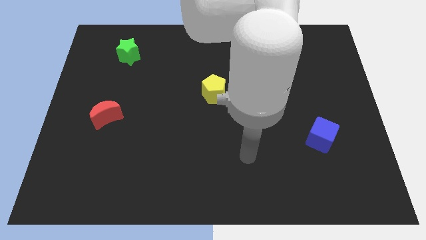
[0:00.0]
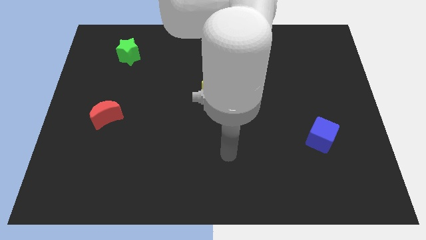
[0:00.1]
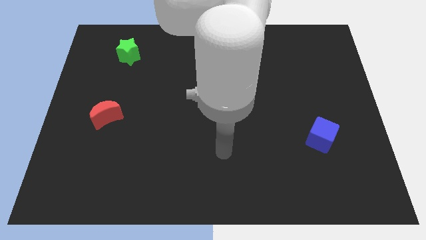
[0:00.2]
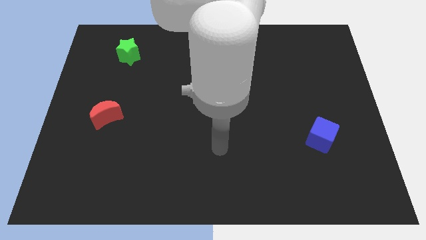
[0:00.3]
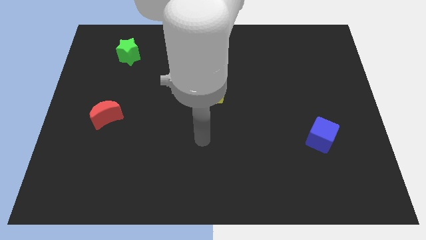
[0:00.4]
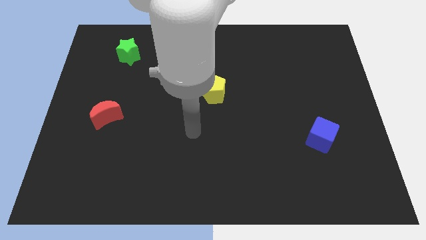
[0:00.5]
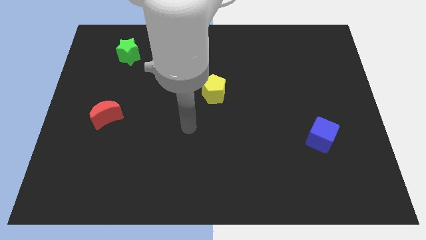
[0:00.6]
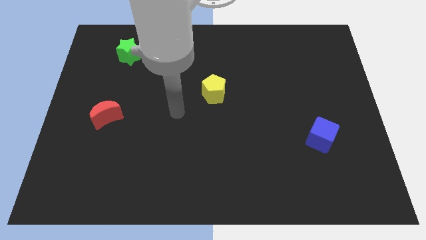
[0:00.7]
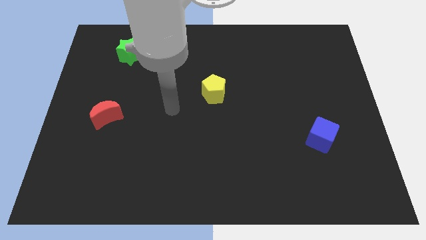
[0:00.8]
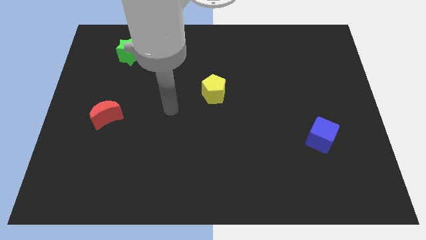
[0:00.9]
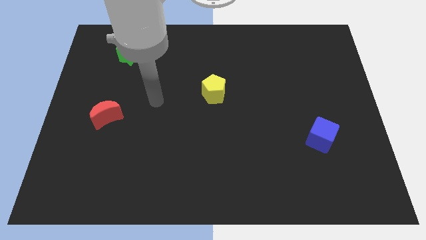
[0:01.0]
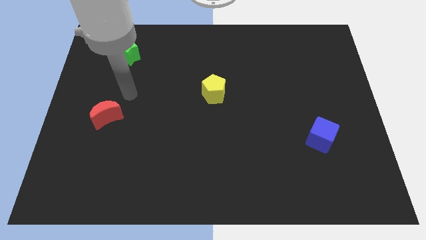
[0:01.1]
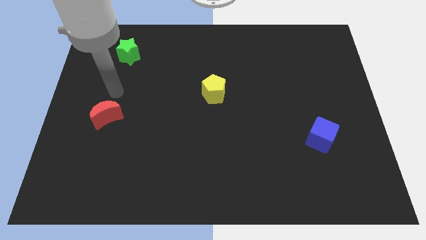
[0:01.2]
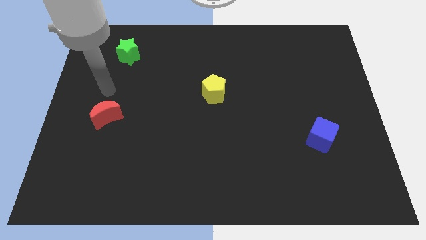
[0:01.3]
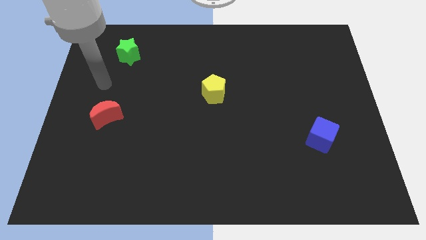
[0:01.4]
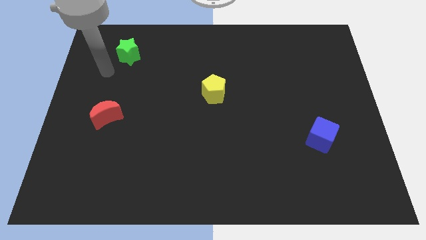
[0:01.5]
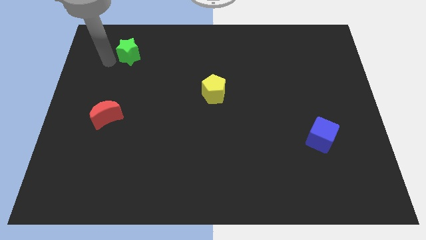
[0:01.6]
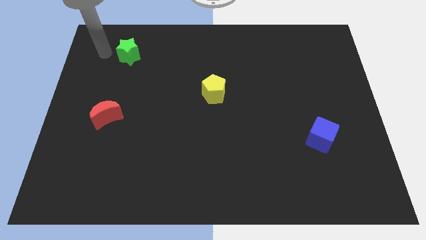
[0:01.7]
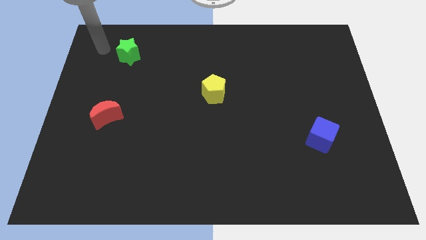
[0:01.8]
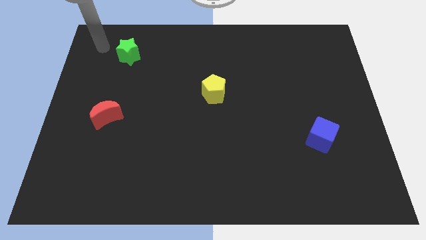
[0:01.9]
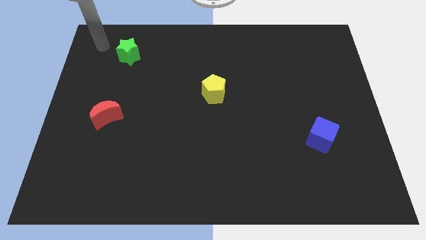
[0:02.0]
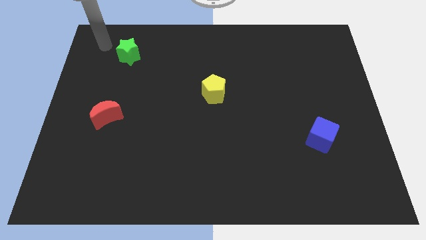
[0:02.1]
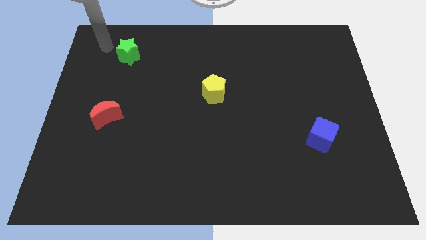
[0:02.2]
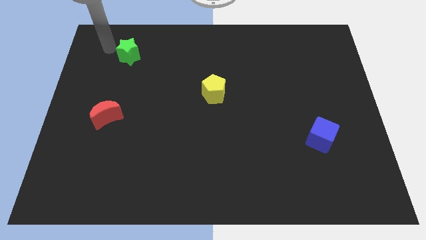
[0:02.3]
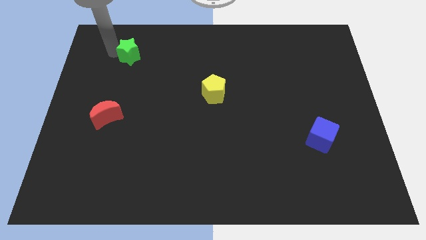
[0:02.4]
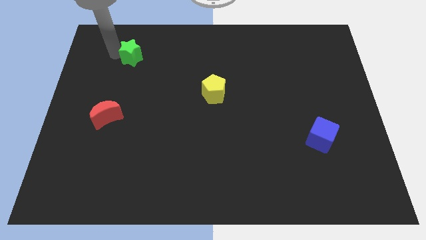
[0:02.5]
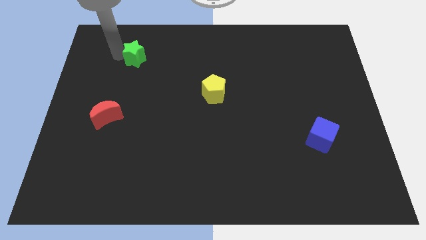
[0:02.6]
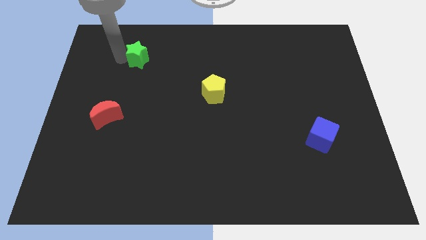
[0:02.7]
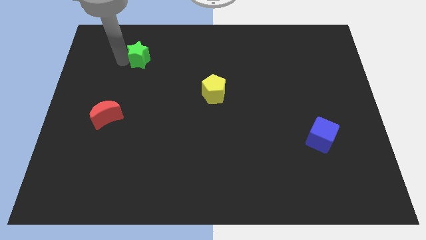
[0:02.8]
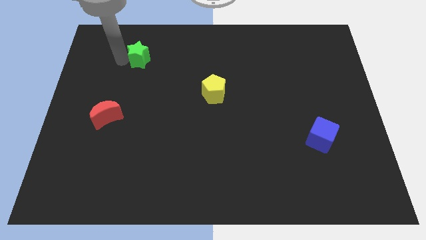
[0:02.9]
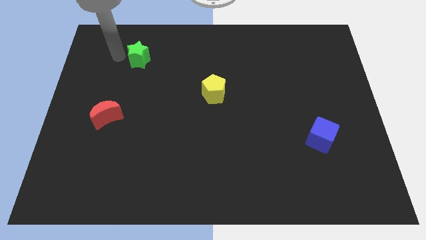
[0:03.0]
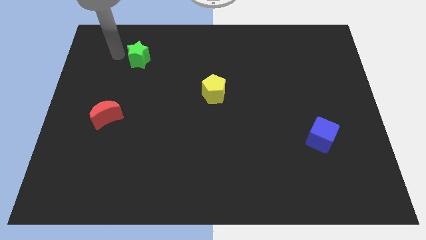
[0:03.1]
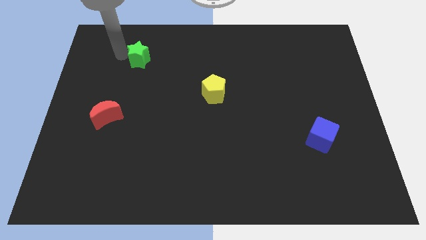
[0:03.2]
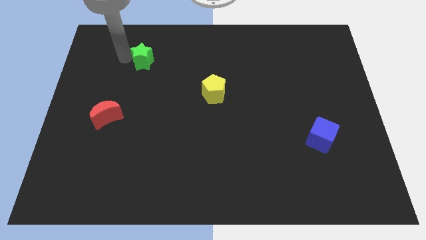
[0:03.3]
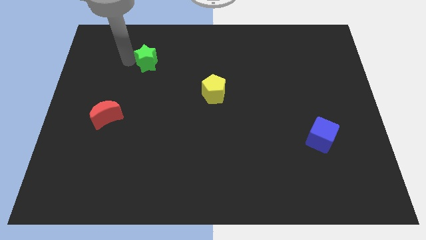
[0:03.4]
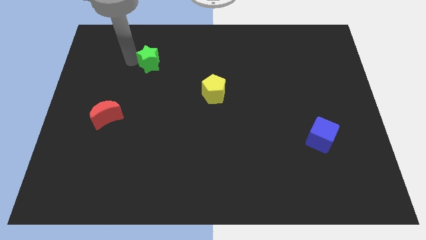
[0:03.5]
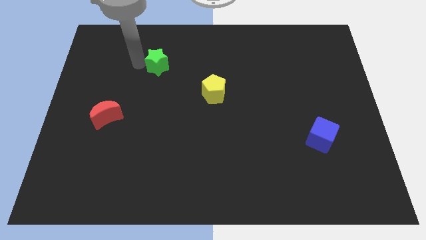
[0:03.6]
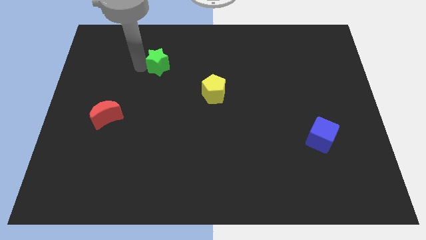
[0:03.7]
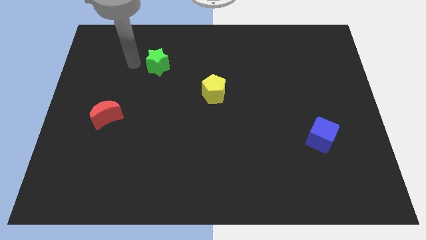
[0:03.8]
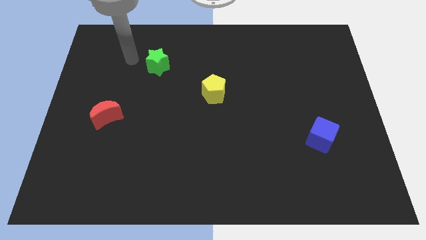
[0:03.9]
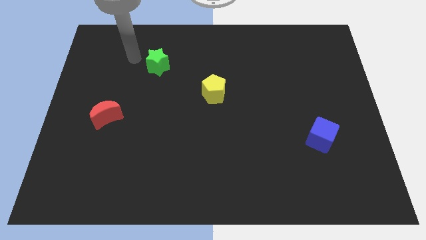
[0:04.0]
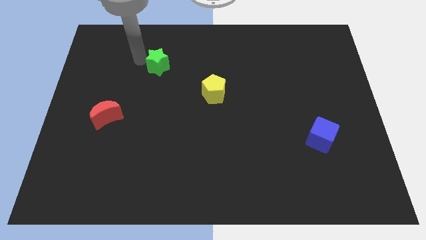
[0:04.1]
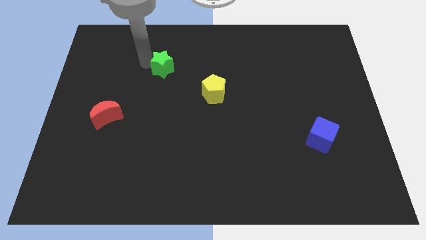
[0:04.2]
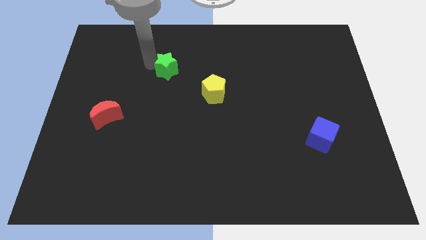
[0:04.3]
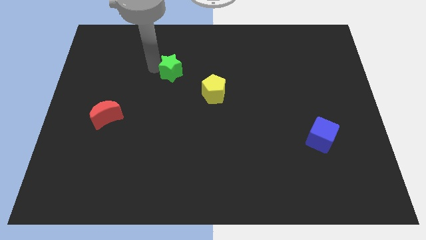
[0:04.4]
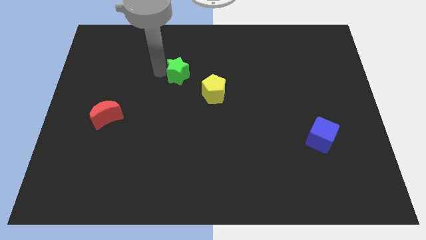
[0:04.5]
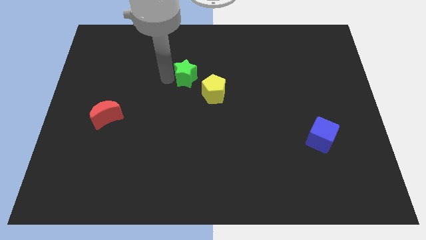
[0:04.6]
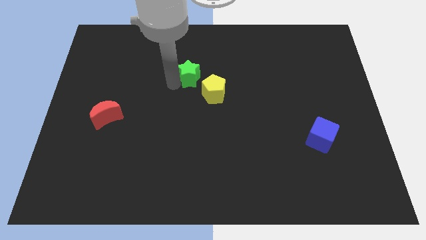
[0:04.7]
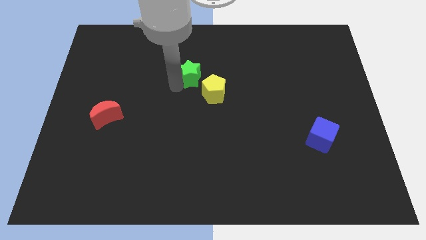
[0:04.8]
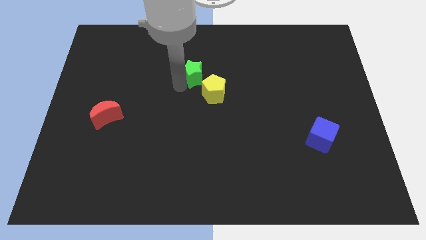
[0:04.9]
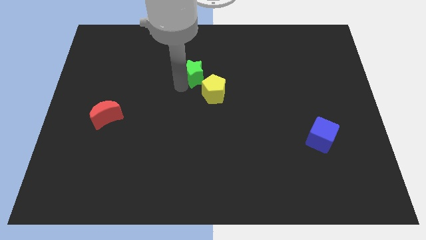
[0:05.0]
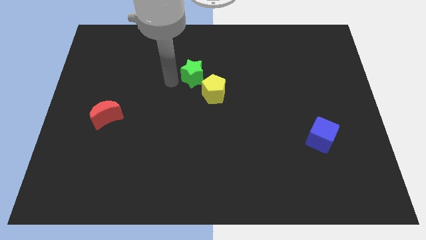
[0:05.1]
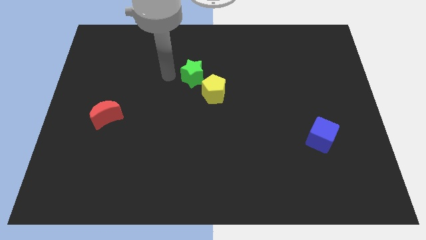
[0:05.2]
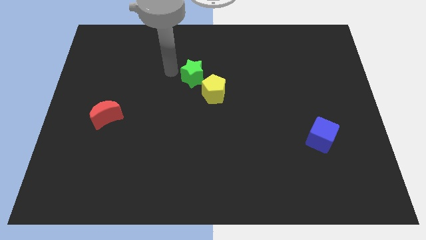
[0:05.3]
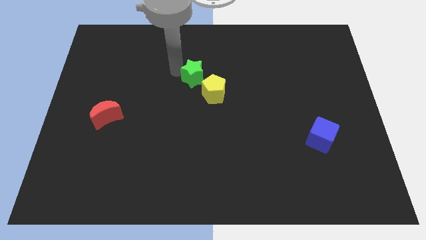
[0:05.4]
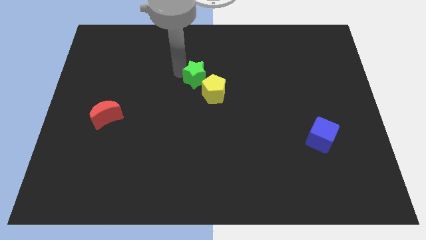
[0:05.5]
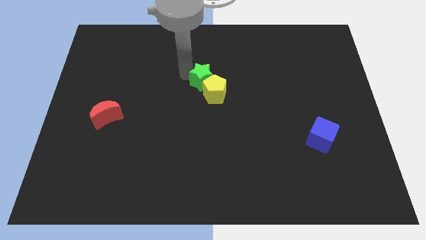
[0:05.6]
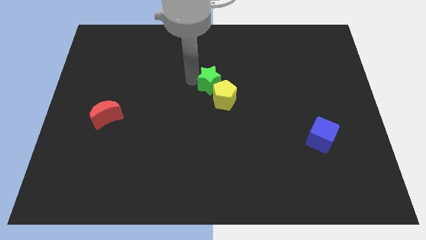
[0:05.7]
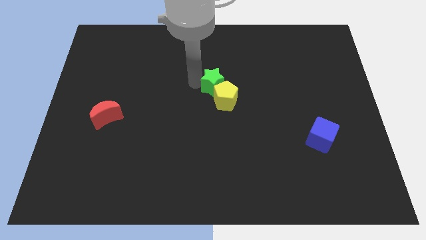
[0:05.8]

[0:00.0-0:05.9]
slide the star towards the yellow block

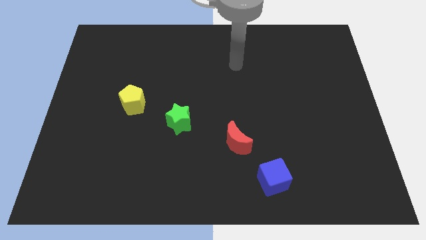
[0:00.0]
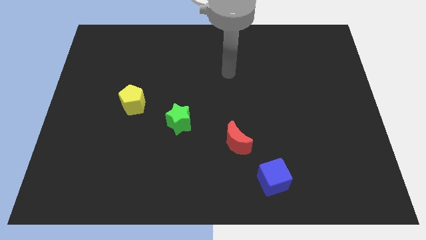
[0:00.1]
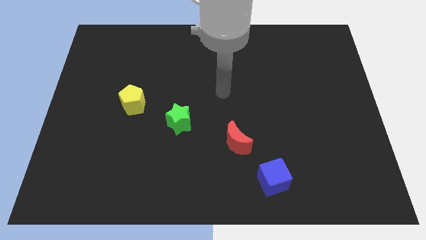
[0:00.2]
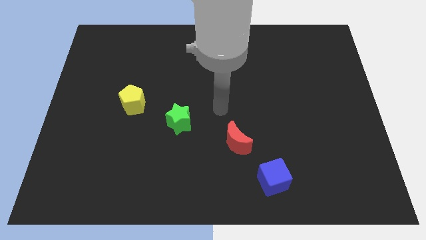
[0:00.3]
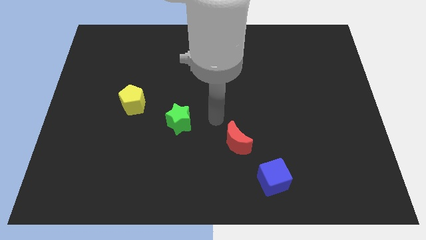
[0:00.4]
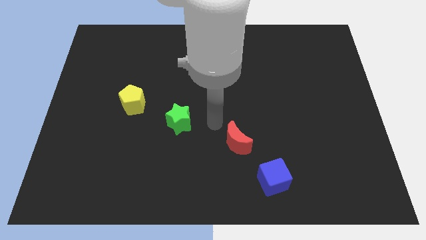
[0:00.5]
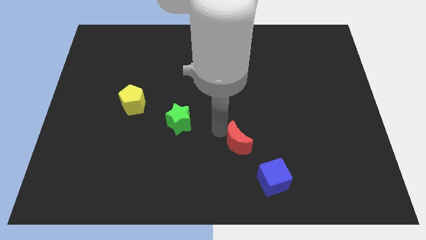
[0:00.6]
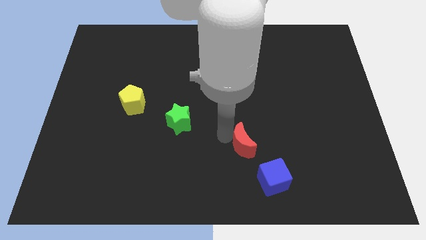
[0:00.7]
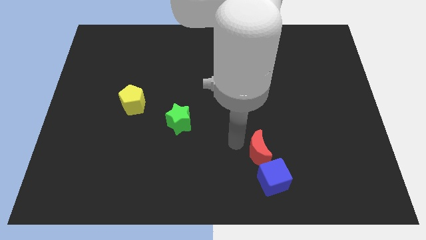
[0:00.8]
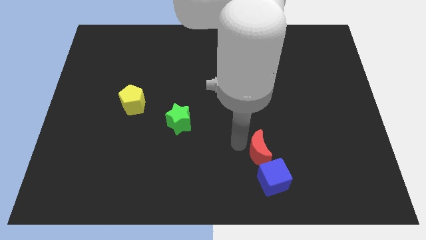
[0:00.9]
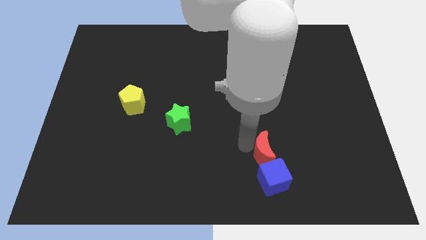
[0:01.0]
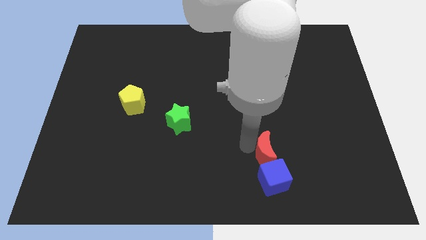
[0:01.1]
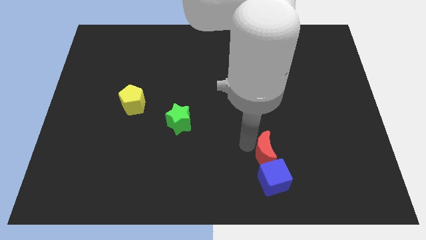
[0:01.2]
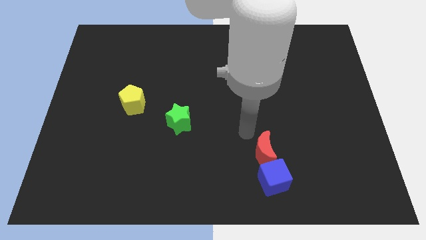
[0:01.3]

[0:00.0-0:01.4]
move the moon close to the blue block

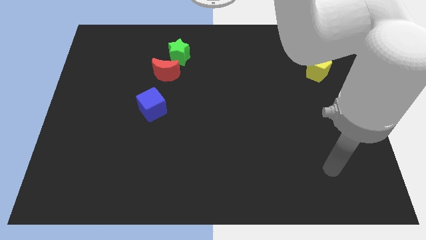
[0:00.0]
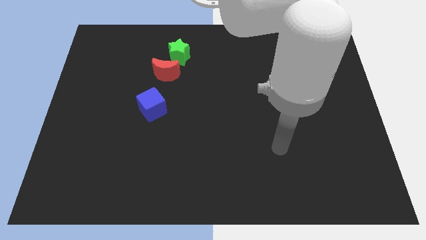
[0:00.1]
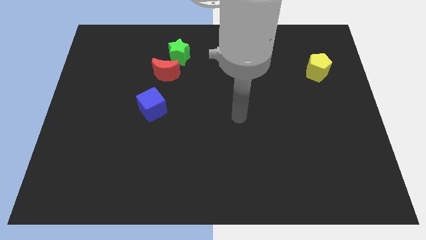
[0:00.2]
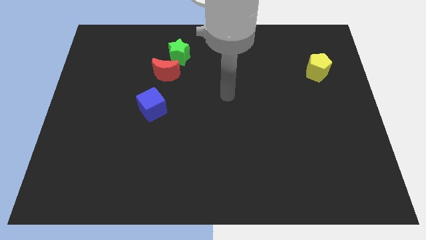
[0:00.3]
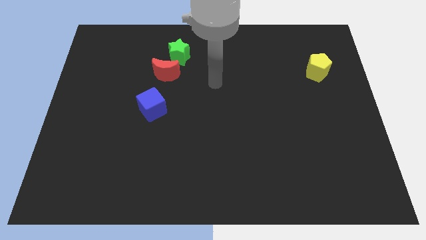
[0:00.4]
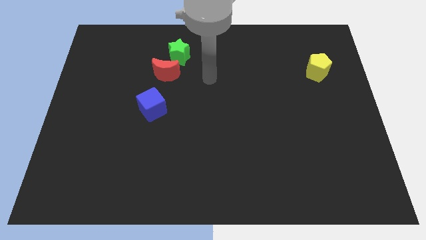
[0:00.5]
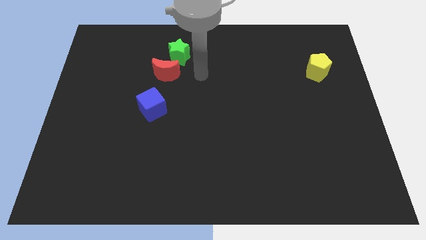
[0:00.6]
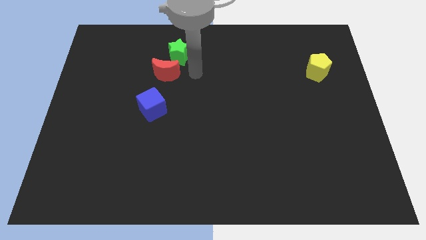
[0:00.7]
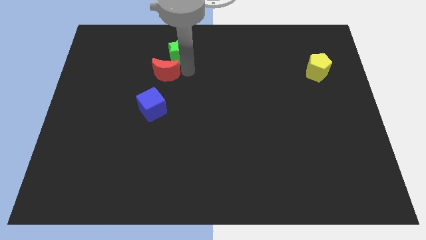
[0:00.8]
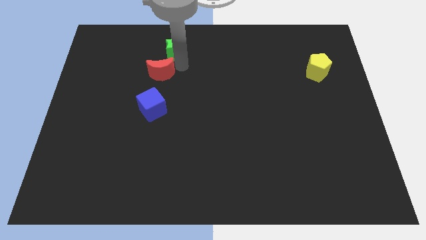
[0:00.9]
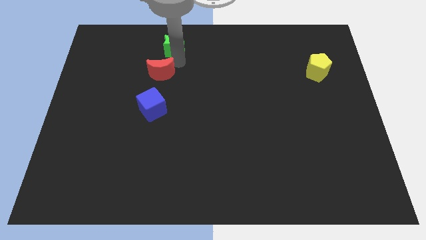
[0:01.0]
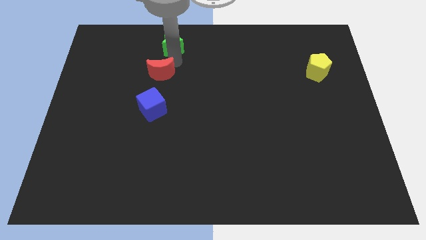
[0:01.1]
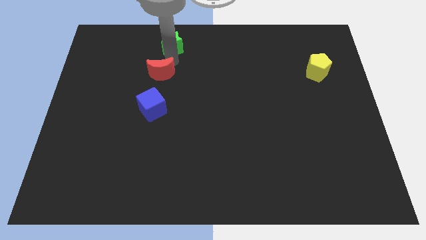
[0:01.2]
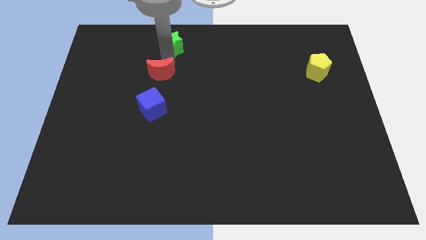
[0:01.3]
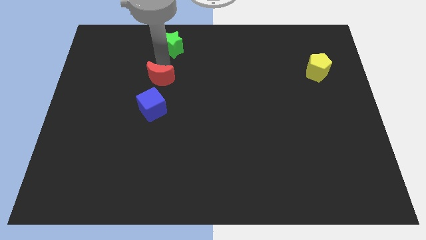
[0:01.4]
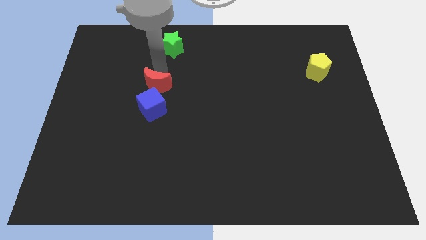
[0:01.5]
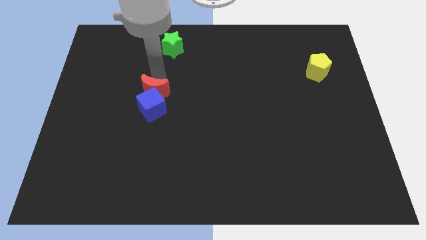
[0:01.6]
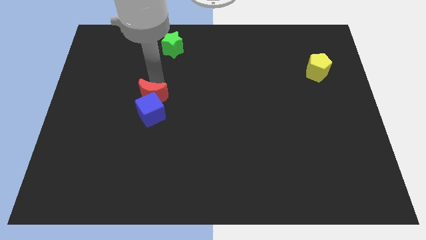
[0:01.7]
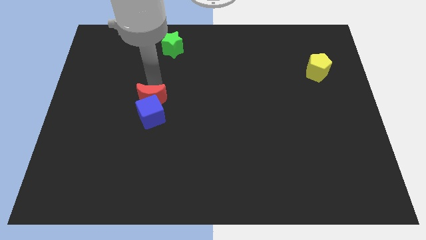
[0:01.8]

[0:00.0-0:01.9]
move the moon towards the blue block
